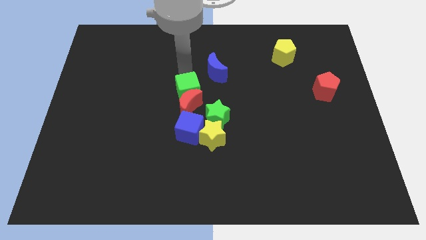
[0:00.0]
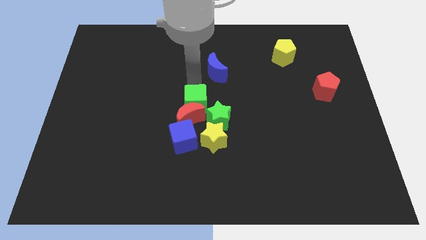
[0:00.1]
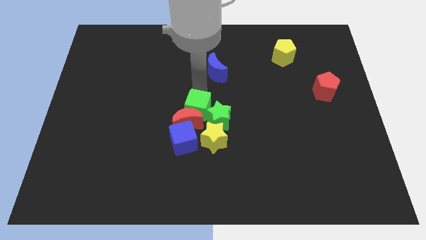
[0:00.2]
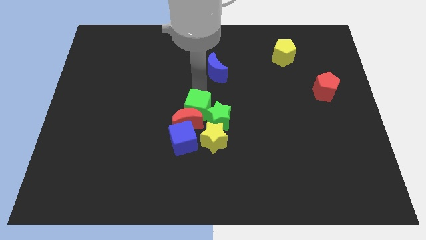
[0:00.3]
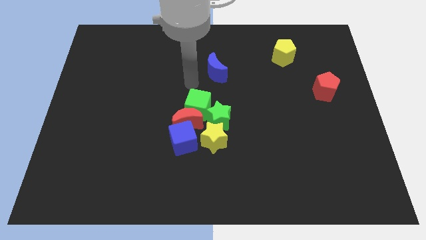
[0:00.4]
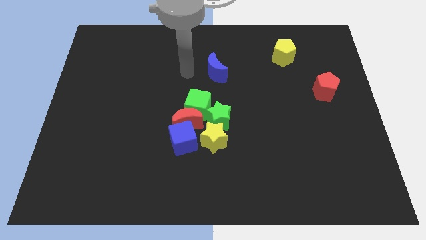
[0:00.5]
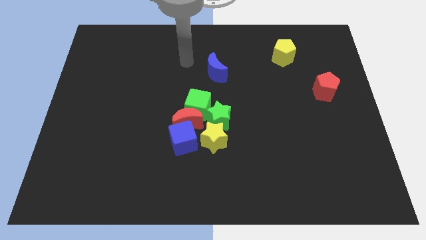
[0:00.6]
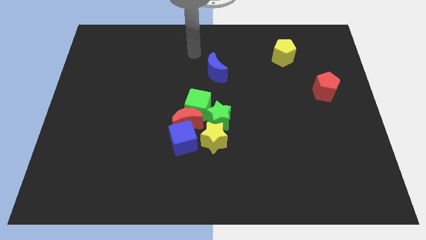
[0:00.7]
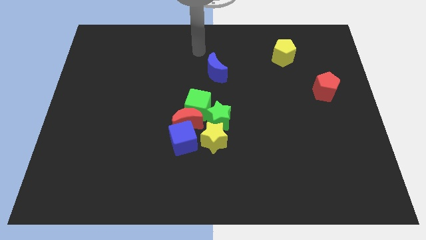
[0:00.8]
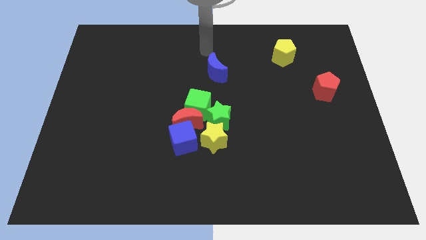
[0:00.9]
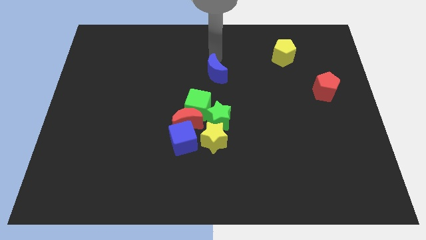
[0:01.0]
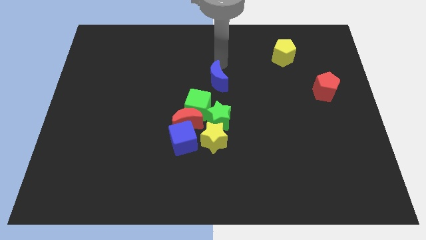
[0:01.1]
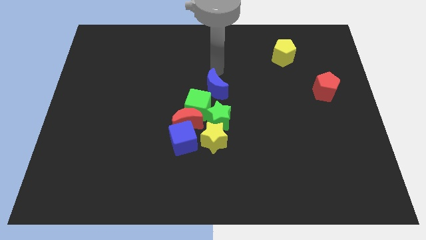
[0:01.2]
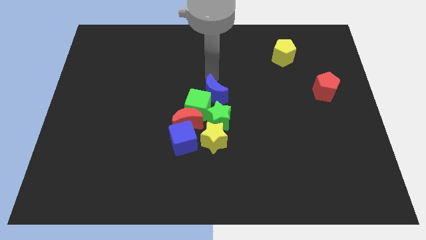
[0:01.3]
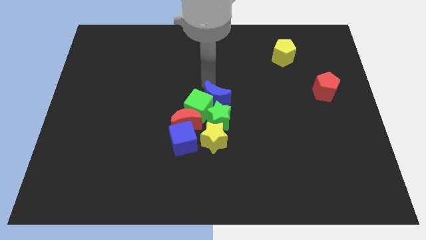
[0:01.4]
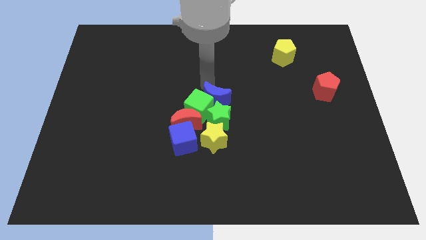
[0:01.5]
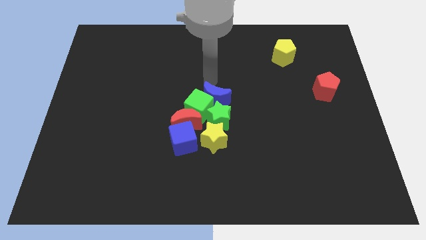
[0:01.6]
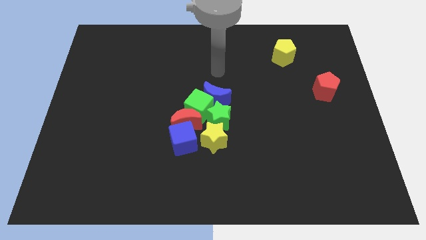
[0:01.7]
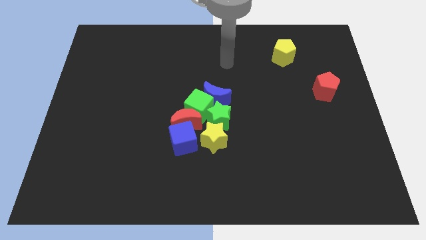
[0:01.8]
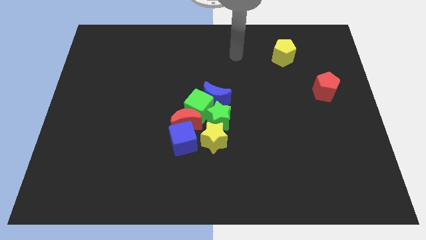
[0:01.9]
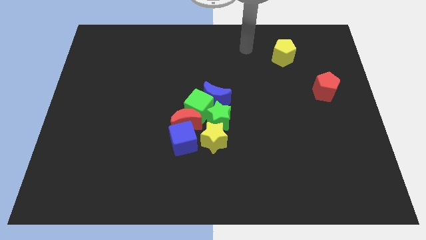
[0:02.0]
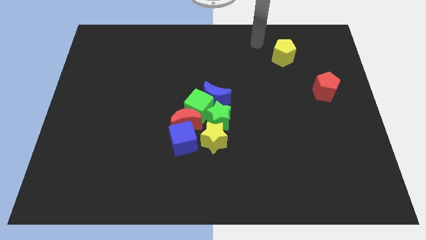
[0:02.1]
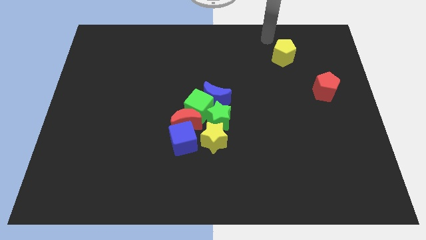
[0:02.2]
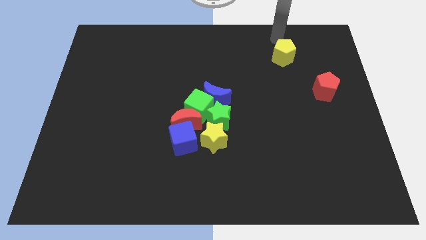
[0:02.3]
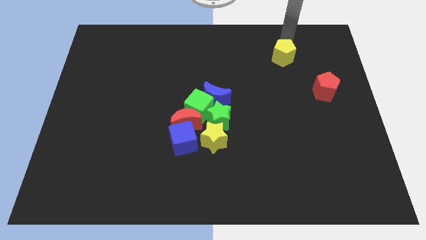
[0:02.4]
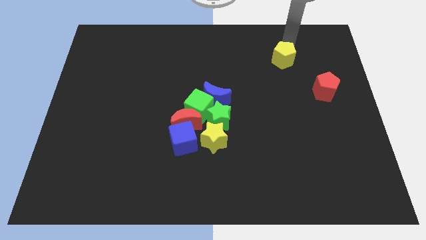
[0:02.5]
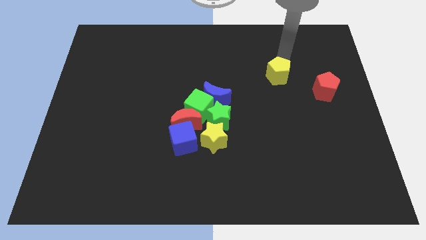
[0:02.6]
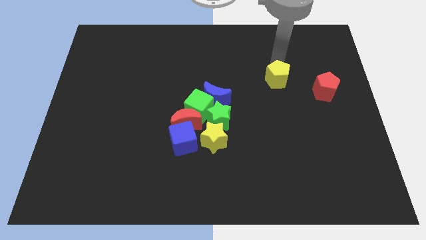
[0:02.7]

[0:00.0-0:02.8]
move yellow pentagon left to the red pentagon

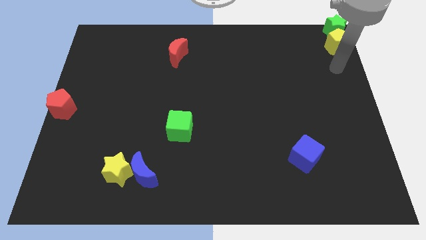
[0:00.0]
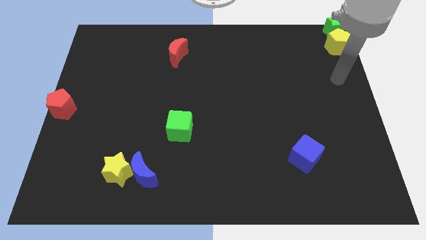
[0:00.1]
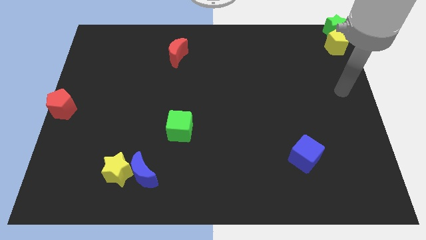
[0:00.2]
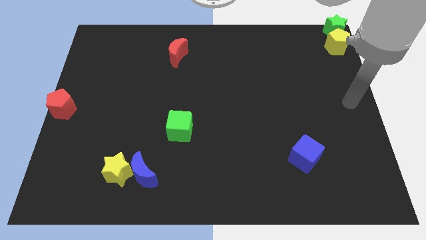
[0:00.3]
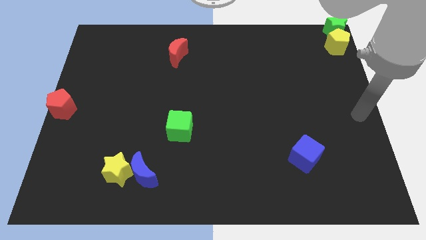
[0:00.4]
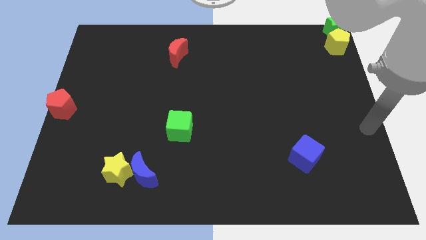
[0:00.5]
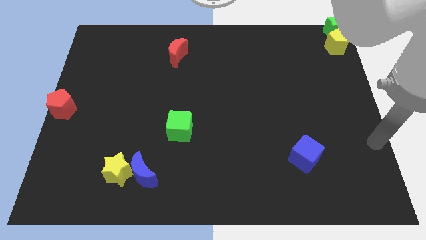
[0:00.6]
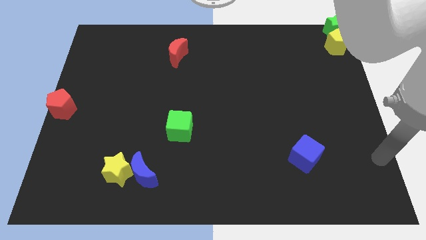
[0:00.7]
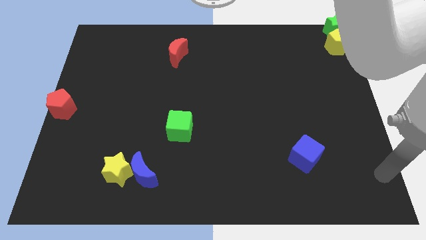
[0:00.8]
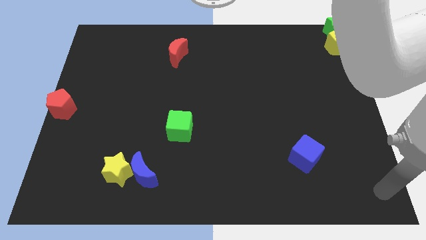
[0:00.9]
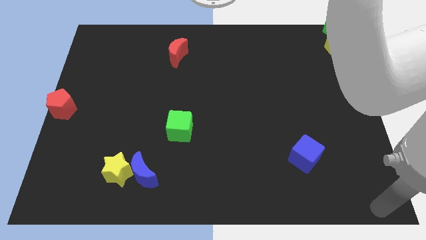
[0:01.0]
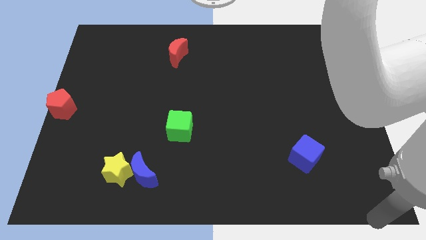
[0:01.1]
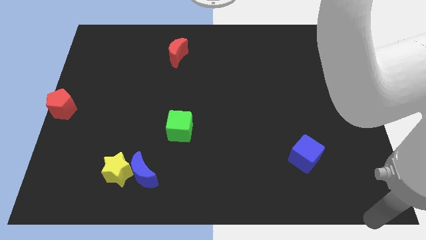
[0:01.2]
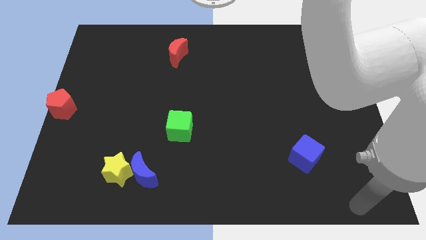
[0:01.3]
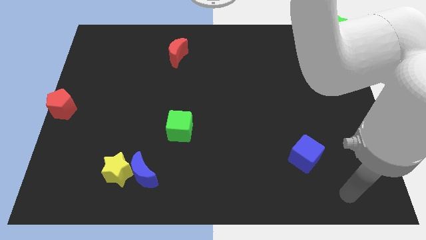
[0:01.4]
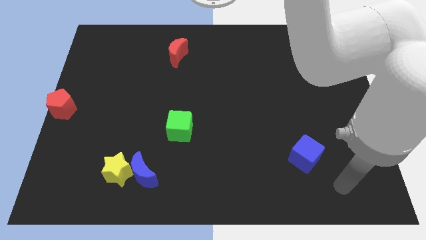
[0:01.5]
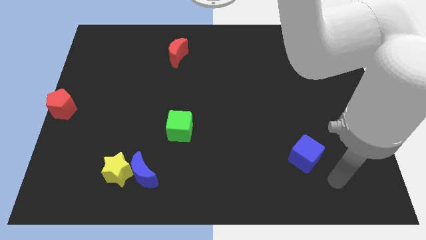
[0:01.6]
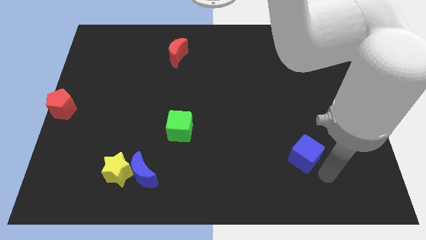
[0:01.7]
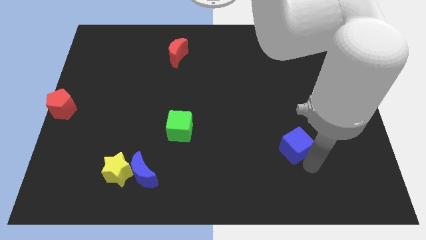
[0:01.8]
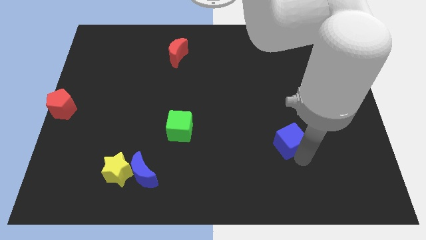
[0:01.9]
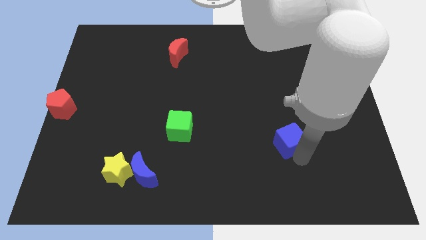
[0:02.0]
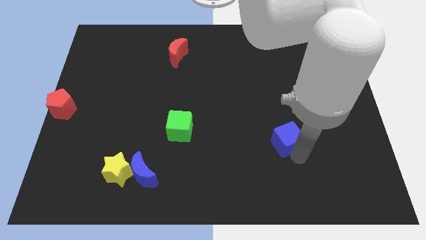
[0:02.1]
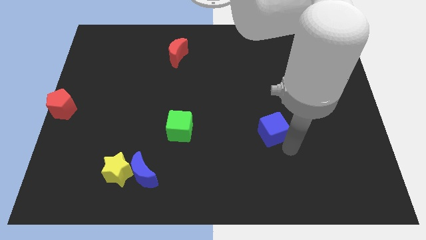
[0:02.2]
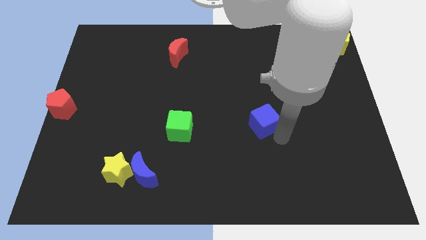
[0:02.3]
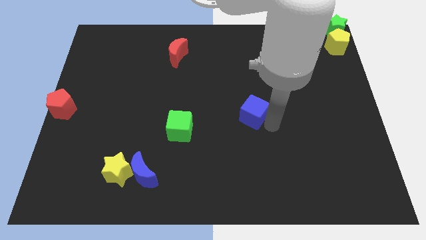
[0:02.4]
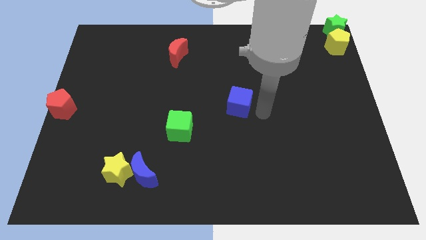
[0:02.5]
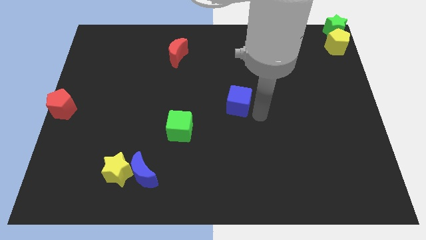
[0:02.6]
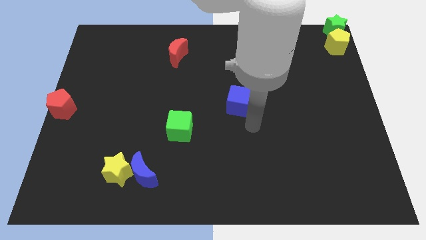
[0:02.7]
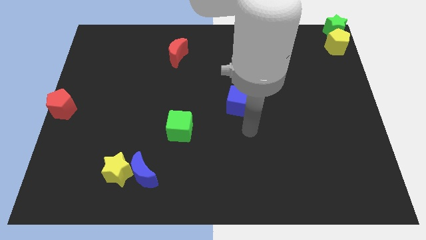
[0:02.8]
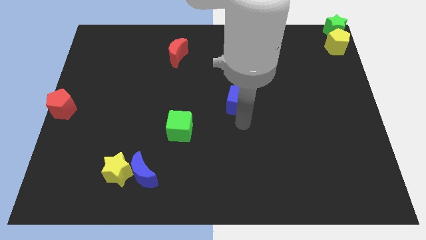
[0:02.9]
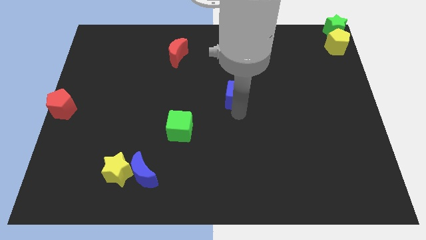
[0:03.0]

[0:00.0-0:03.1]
push the blue cube diagonally in between the yellow pentagon and green cube

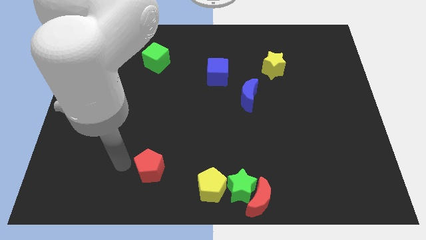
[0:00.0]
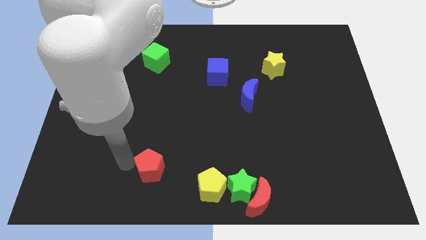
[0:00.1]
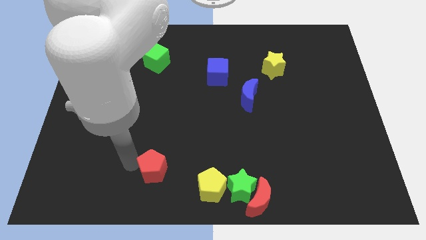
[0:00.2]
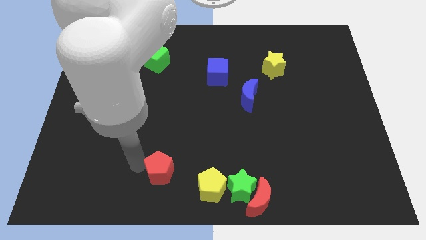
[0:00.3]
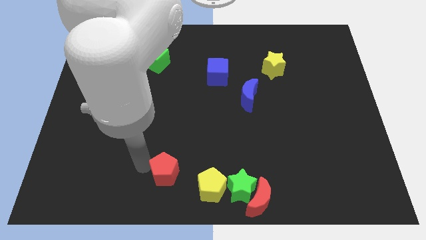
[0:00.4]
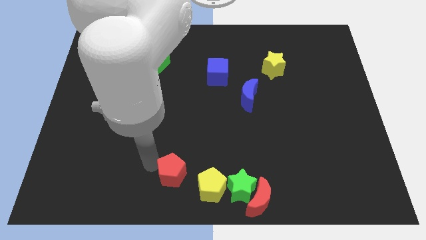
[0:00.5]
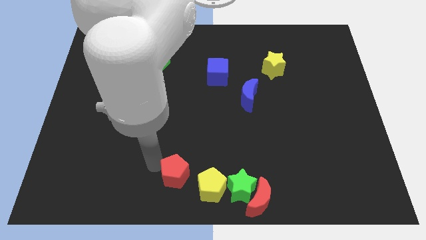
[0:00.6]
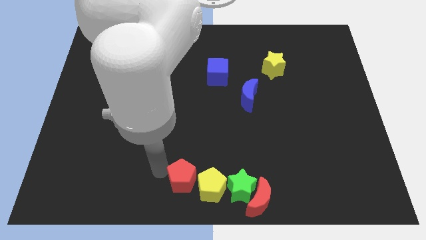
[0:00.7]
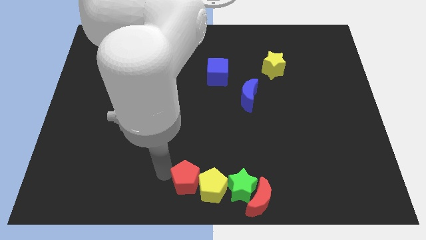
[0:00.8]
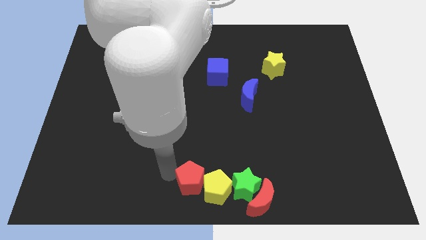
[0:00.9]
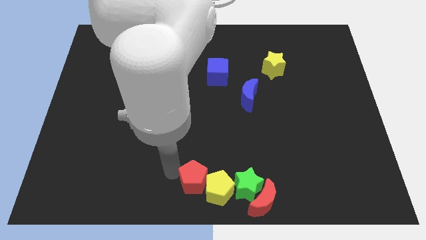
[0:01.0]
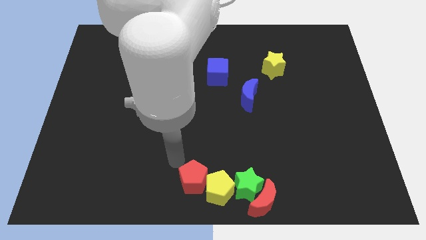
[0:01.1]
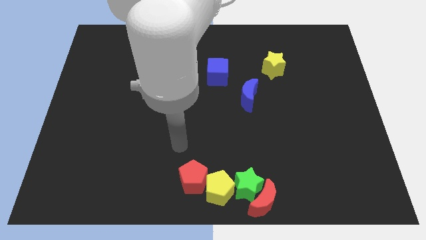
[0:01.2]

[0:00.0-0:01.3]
push the red pentagon into yellow pentagon

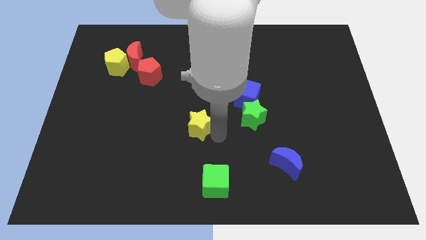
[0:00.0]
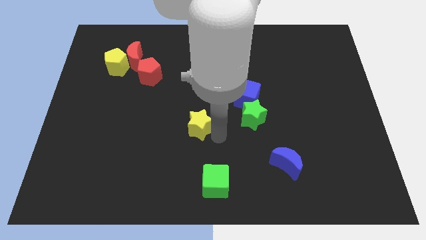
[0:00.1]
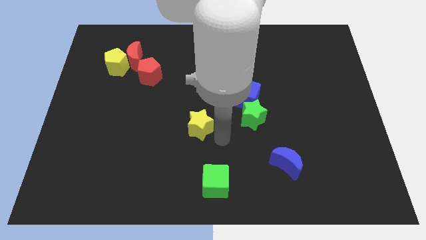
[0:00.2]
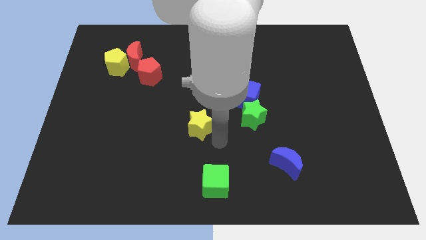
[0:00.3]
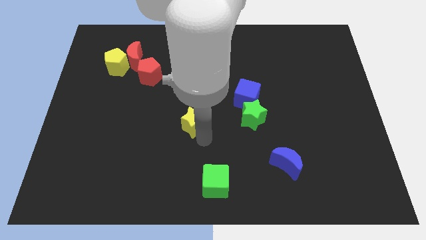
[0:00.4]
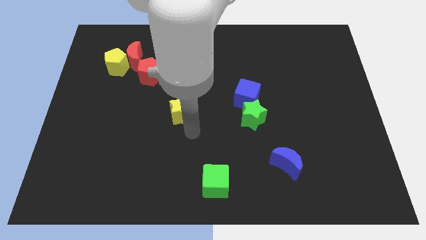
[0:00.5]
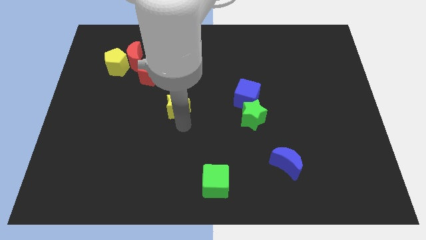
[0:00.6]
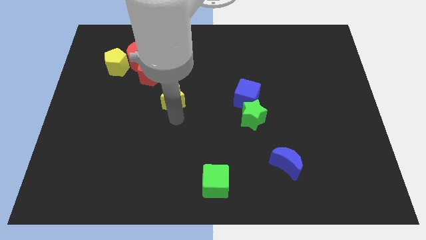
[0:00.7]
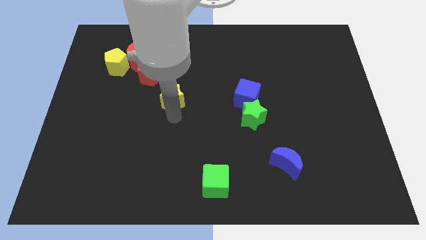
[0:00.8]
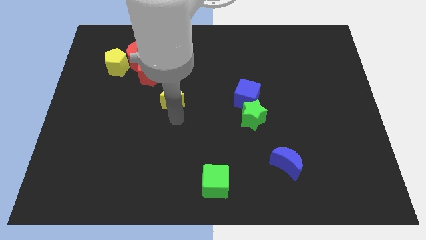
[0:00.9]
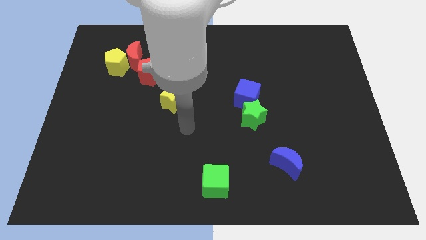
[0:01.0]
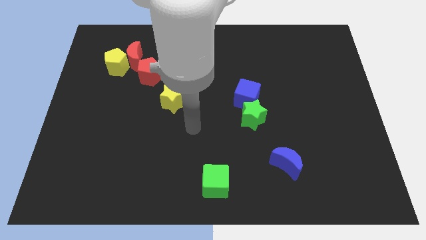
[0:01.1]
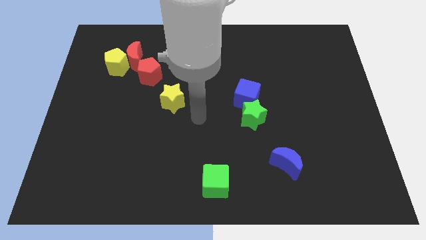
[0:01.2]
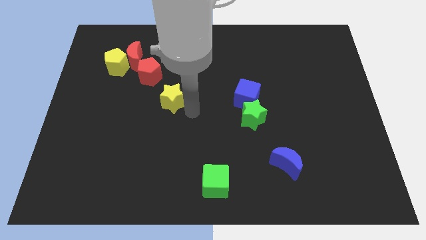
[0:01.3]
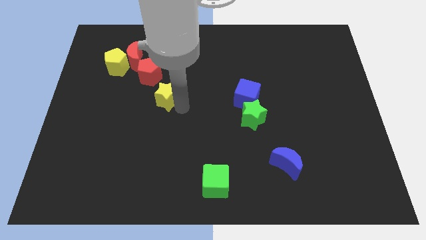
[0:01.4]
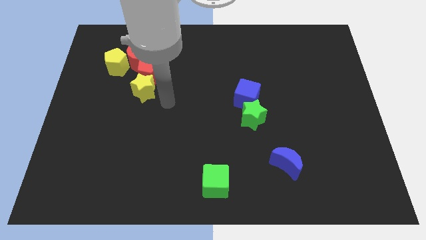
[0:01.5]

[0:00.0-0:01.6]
place yellow star below the red pentagon

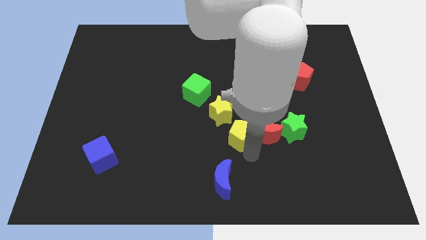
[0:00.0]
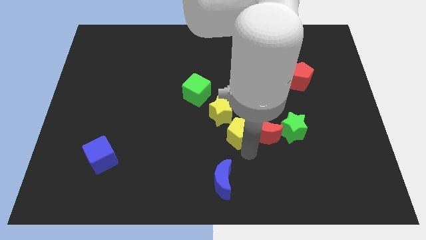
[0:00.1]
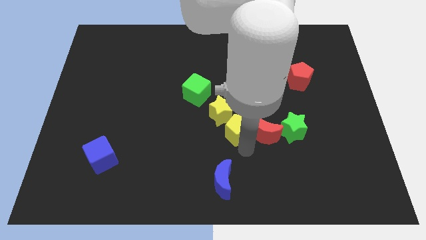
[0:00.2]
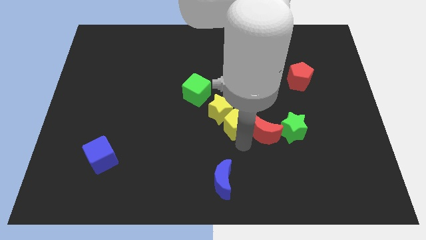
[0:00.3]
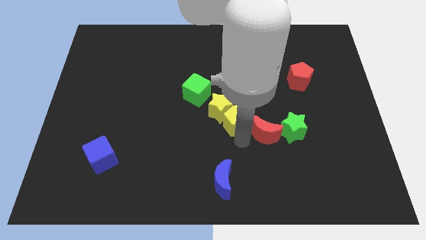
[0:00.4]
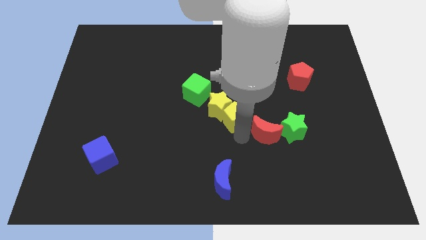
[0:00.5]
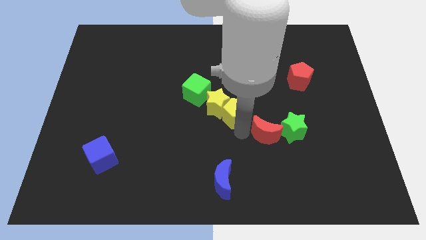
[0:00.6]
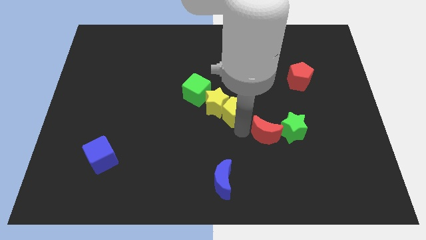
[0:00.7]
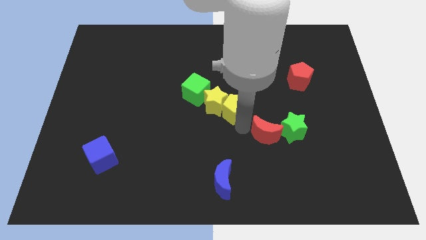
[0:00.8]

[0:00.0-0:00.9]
push the yellow pentagon to the right of the yellow star
